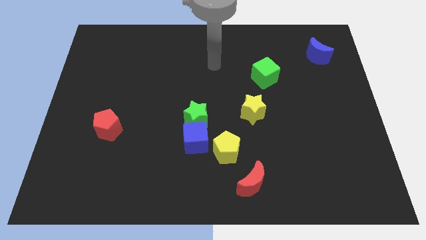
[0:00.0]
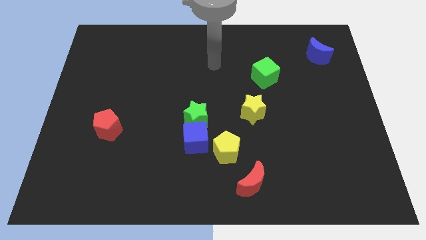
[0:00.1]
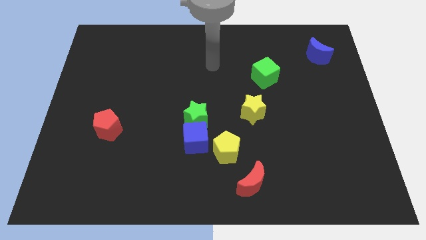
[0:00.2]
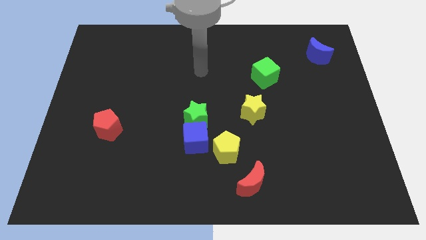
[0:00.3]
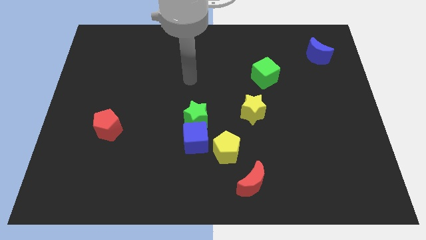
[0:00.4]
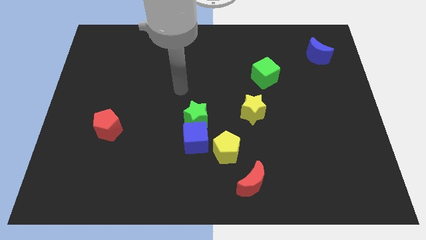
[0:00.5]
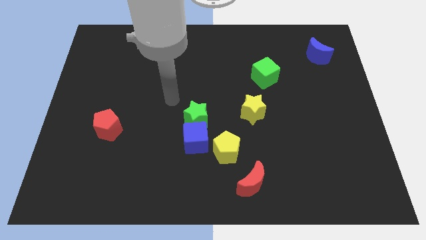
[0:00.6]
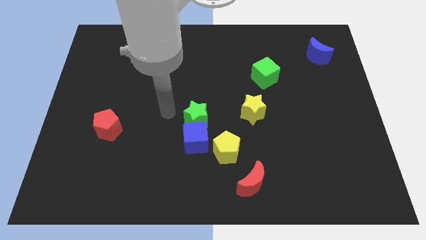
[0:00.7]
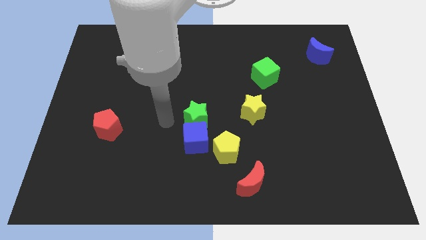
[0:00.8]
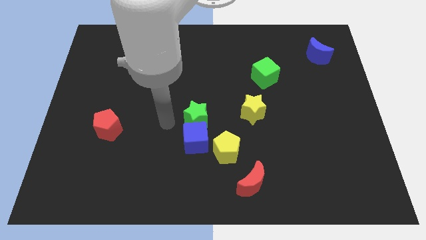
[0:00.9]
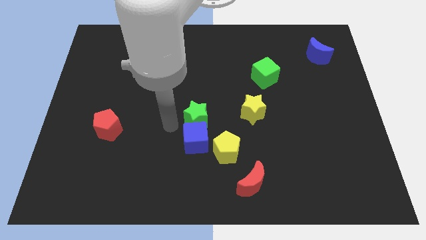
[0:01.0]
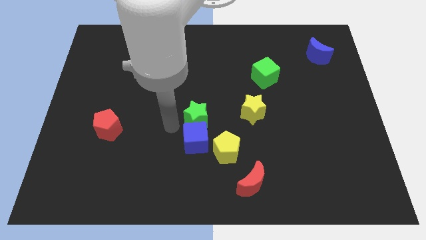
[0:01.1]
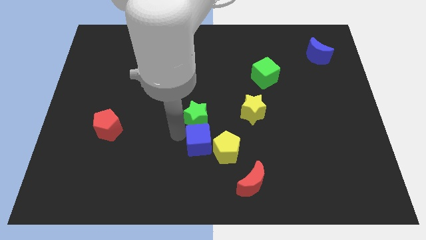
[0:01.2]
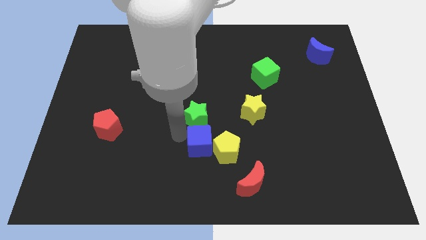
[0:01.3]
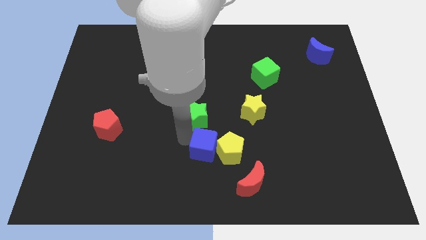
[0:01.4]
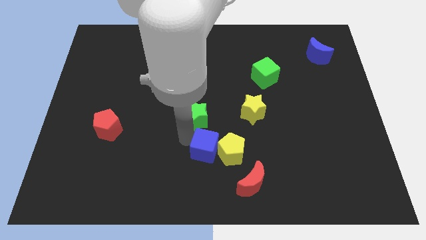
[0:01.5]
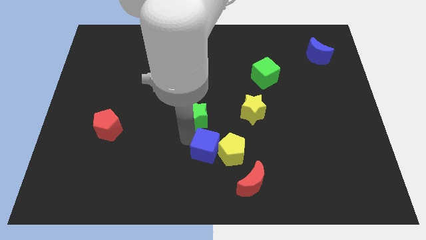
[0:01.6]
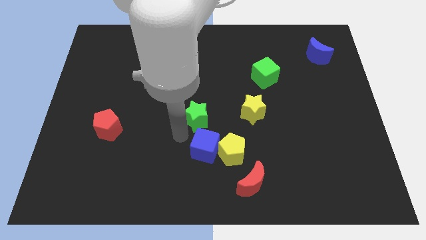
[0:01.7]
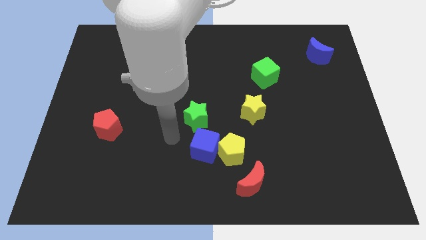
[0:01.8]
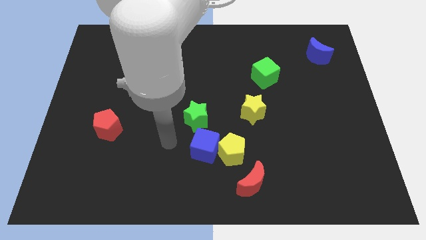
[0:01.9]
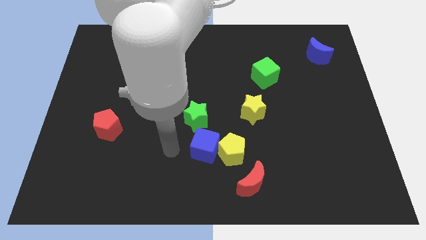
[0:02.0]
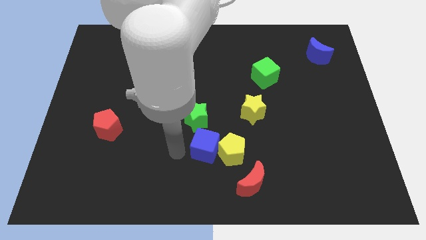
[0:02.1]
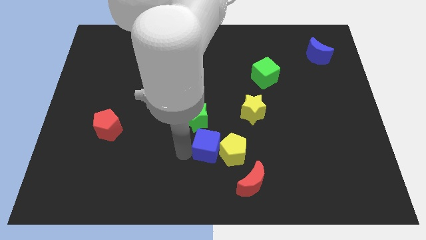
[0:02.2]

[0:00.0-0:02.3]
move blue cube close to yellow penatgon

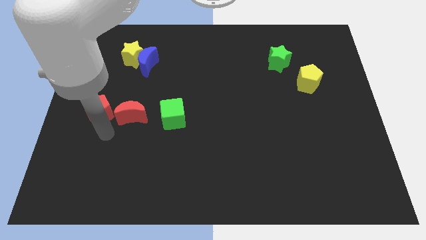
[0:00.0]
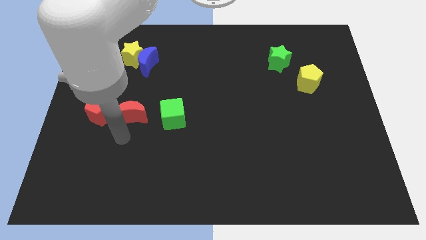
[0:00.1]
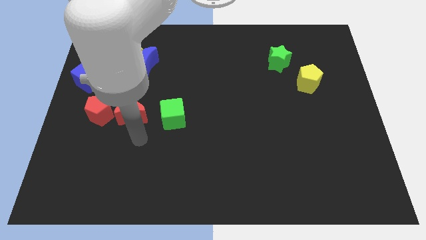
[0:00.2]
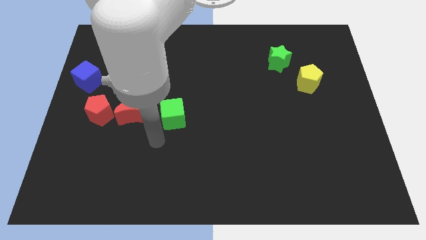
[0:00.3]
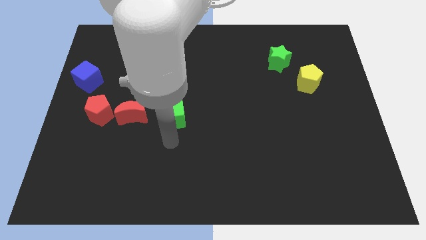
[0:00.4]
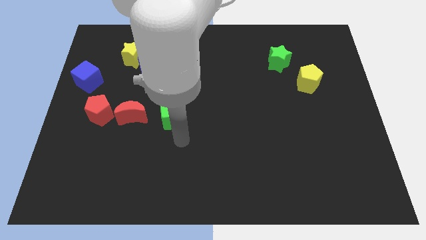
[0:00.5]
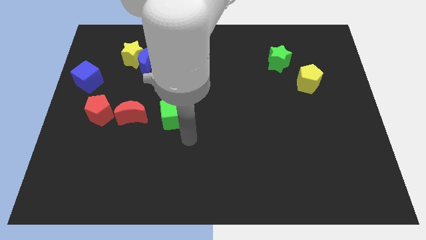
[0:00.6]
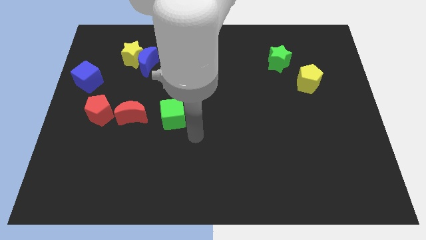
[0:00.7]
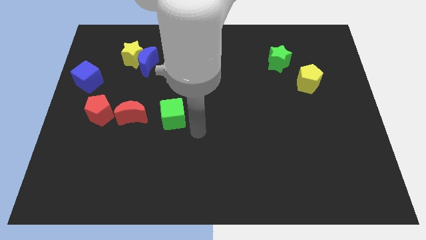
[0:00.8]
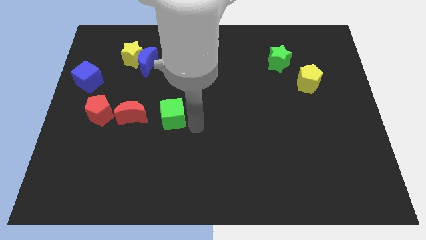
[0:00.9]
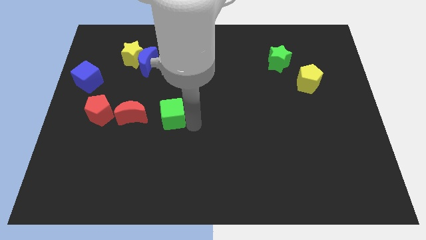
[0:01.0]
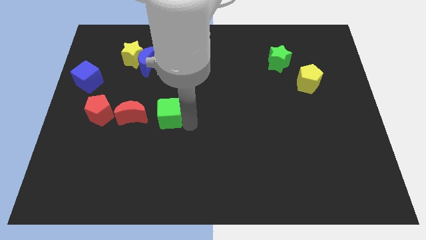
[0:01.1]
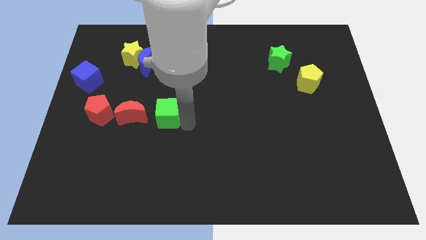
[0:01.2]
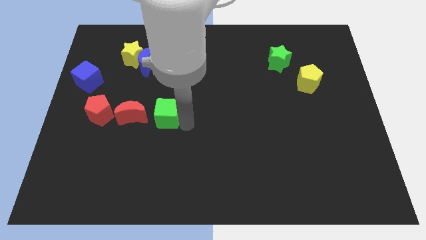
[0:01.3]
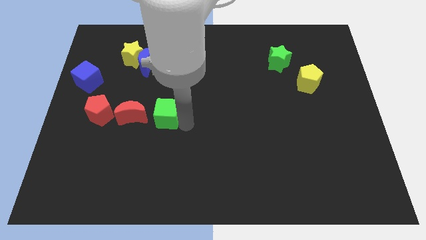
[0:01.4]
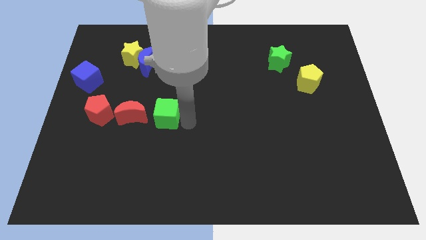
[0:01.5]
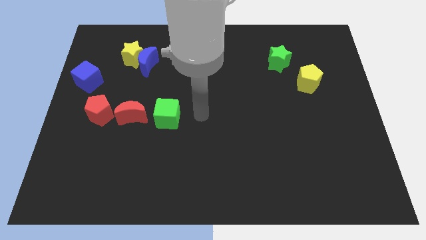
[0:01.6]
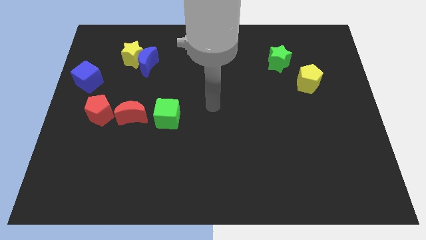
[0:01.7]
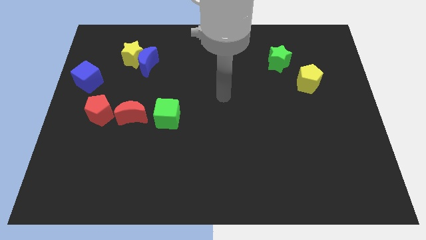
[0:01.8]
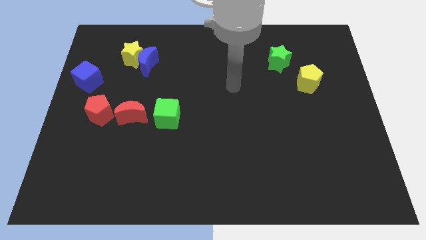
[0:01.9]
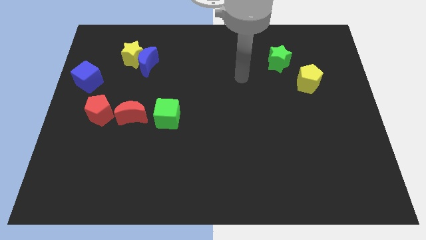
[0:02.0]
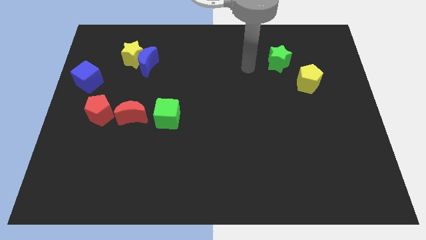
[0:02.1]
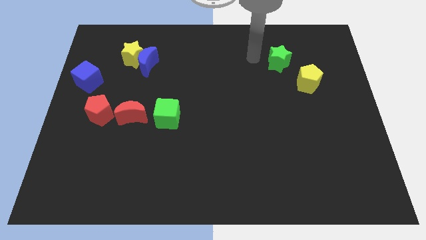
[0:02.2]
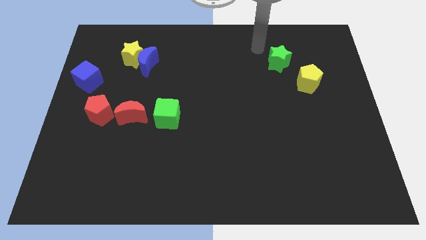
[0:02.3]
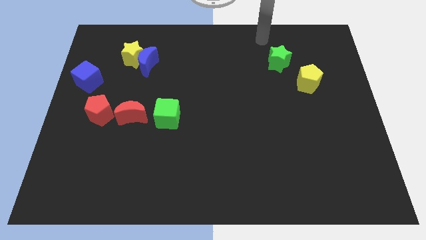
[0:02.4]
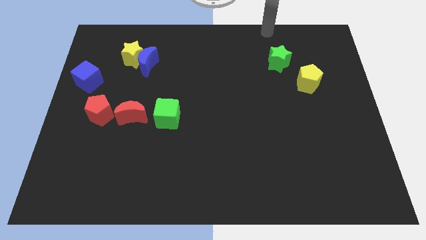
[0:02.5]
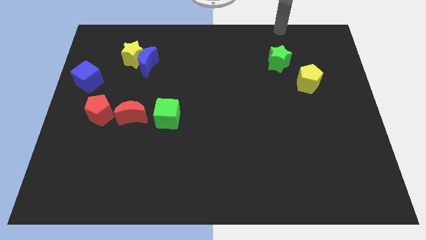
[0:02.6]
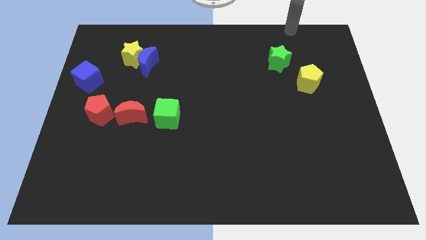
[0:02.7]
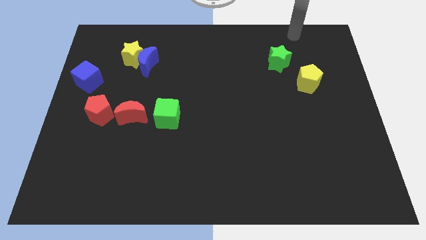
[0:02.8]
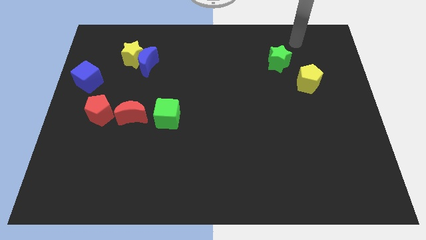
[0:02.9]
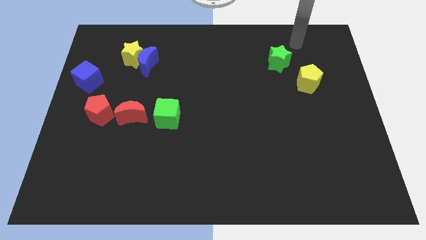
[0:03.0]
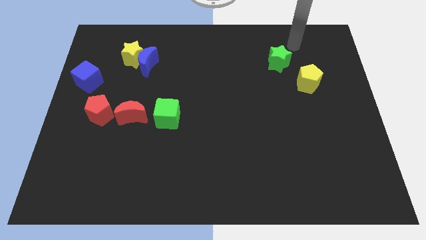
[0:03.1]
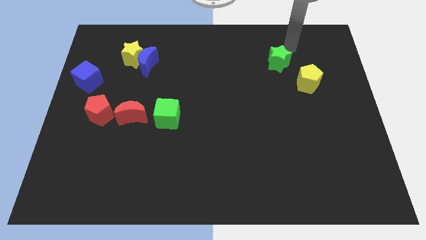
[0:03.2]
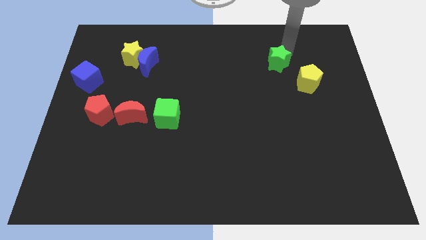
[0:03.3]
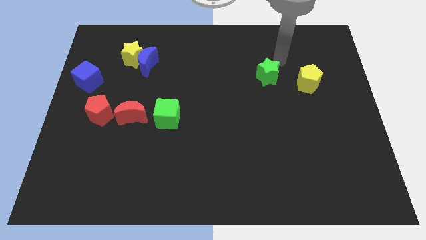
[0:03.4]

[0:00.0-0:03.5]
push the green cube slightly to the left

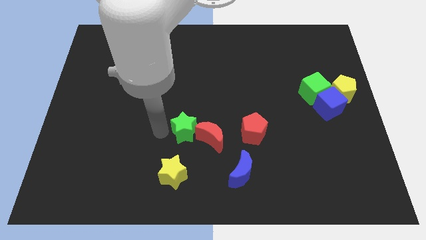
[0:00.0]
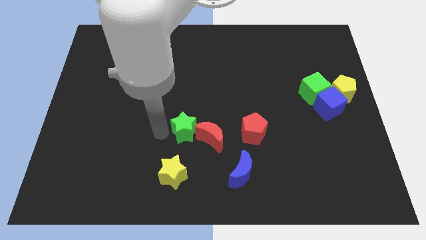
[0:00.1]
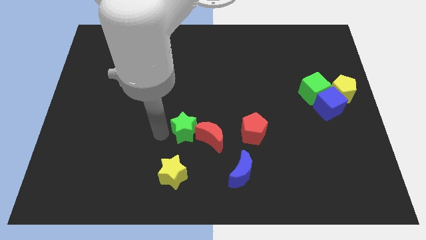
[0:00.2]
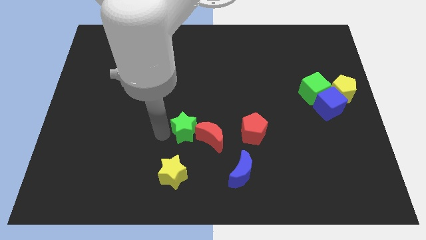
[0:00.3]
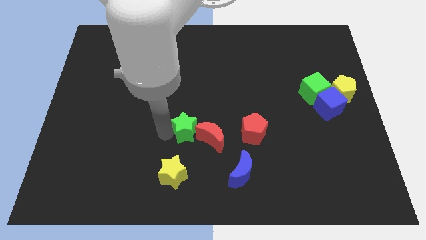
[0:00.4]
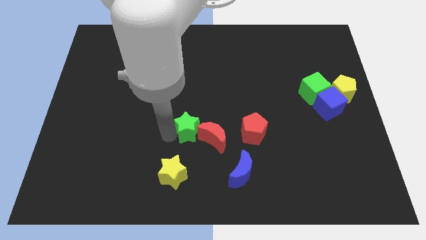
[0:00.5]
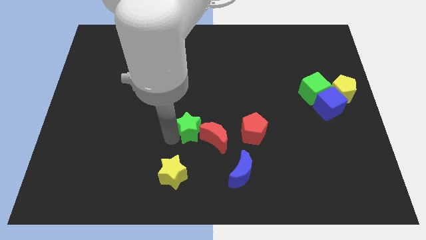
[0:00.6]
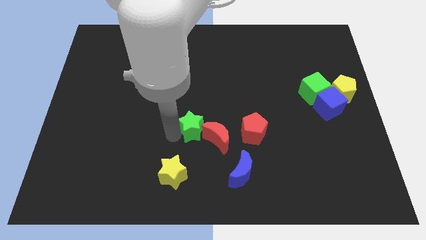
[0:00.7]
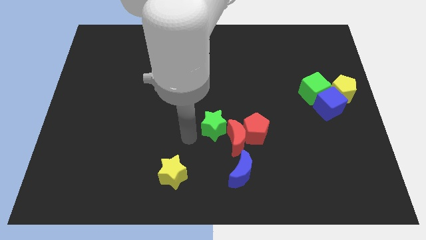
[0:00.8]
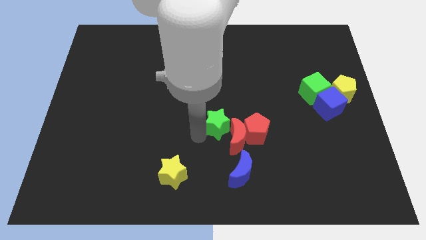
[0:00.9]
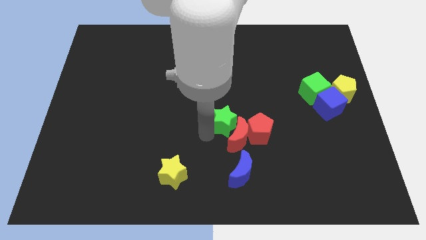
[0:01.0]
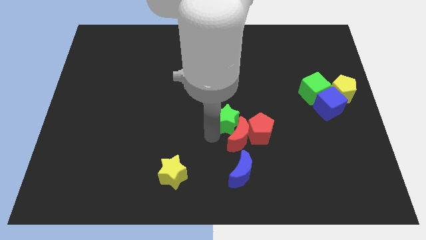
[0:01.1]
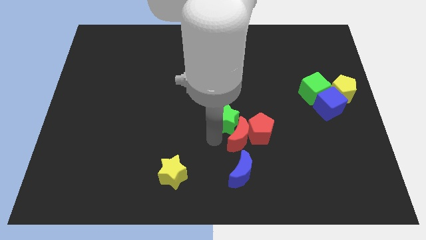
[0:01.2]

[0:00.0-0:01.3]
push the green star and red moon into the red pentagon

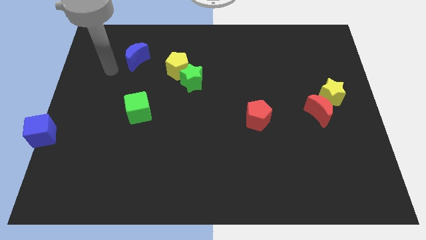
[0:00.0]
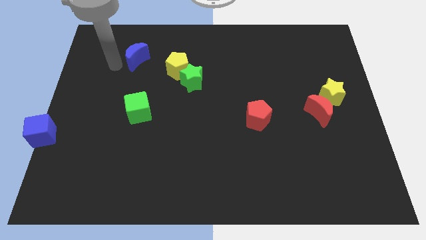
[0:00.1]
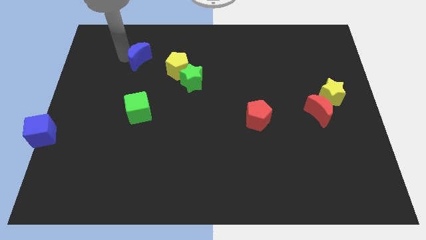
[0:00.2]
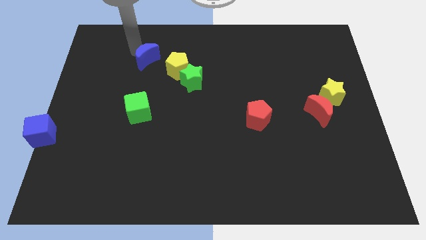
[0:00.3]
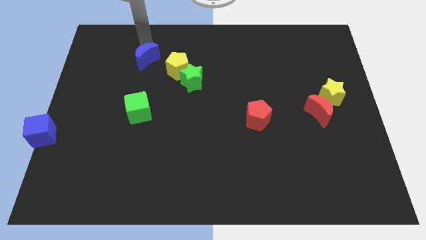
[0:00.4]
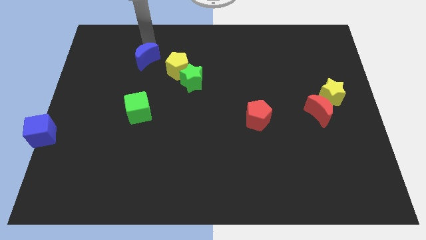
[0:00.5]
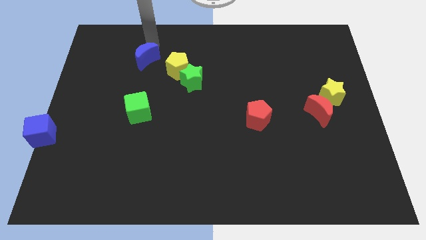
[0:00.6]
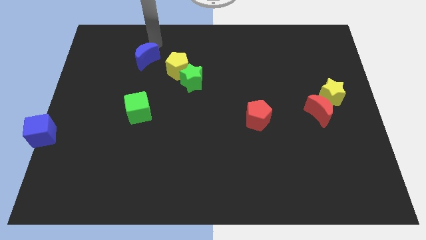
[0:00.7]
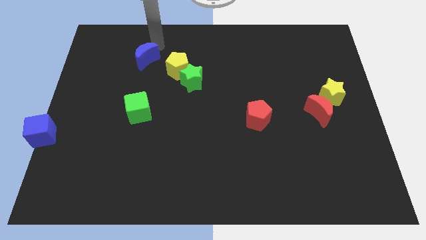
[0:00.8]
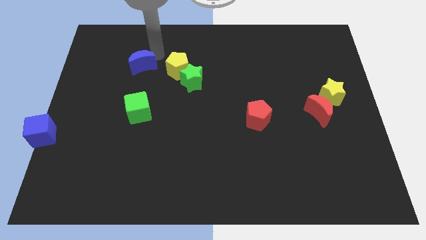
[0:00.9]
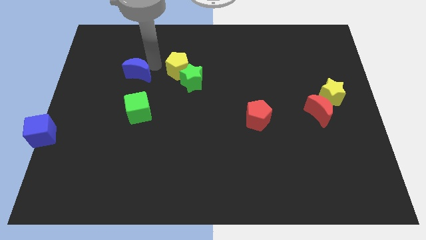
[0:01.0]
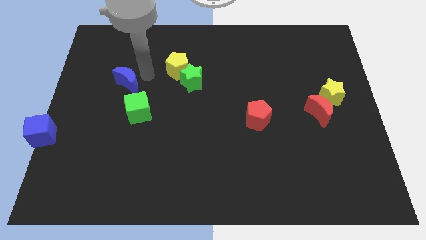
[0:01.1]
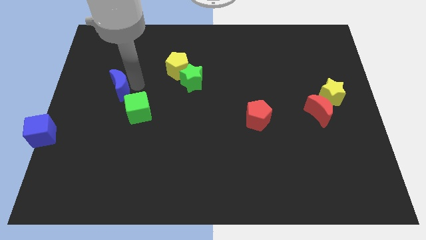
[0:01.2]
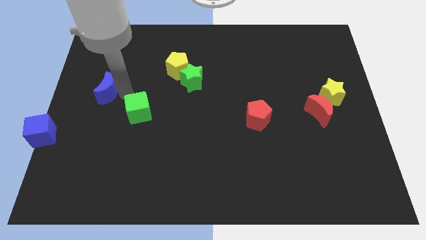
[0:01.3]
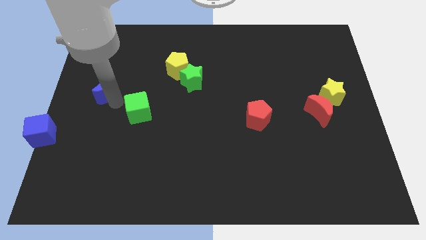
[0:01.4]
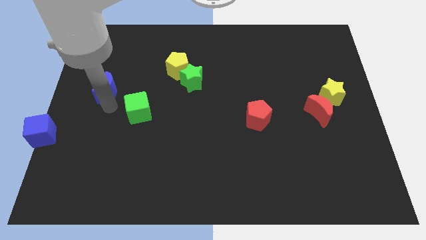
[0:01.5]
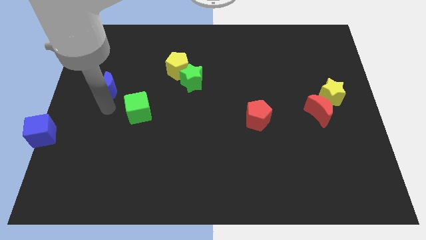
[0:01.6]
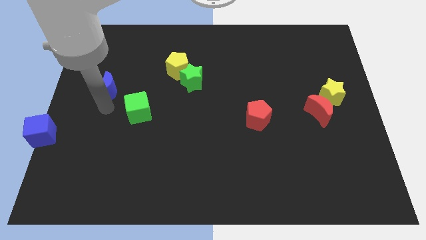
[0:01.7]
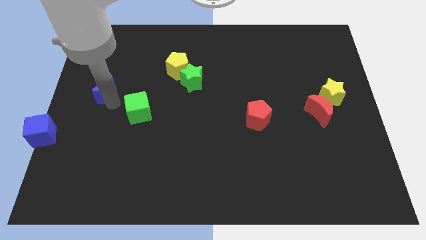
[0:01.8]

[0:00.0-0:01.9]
move blue moon downwards
